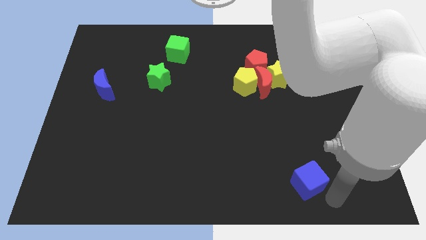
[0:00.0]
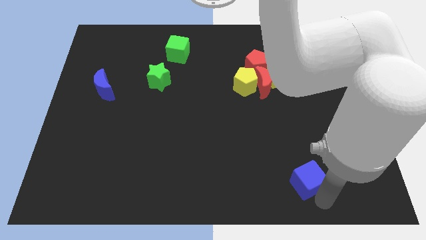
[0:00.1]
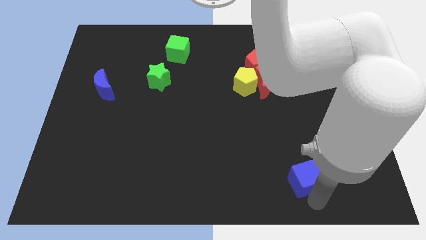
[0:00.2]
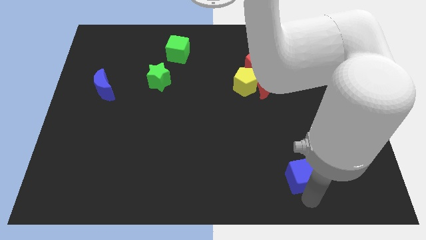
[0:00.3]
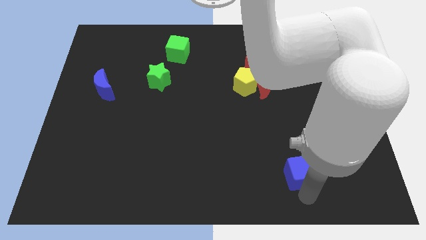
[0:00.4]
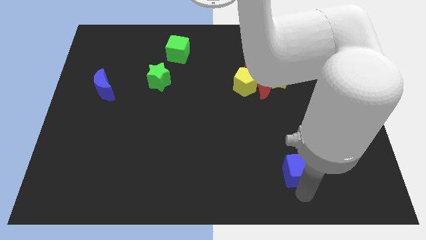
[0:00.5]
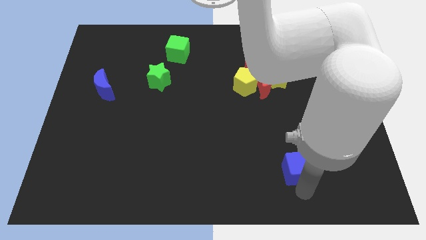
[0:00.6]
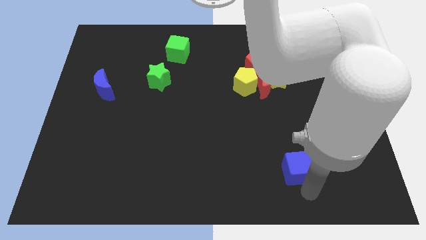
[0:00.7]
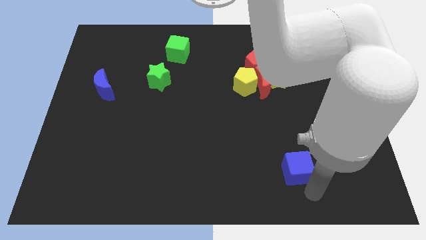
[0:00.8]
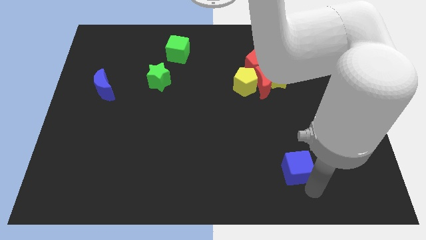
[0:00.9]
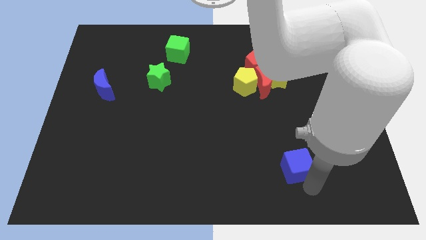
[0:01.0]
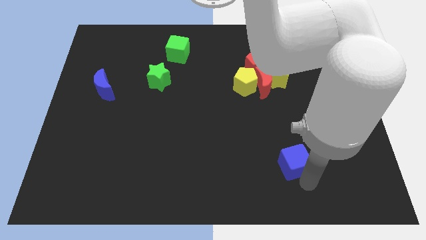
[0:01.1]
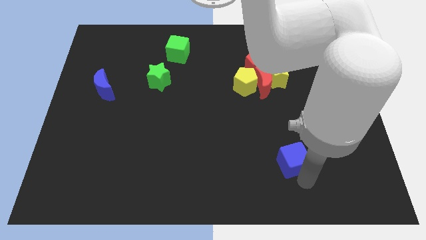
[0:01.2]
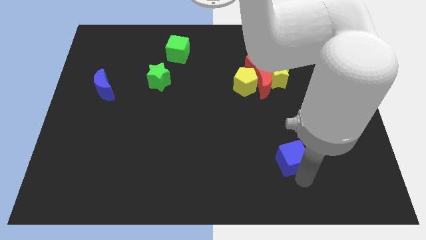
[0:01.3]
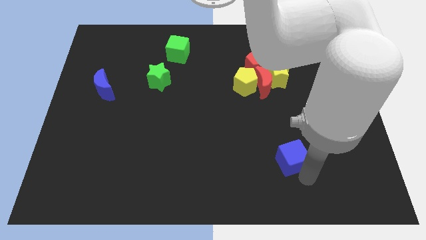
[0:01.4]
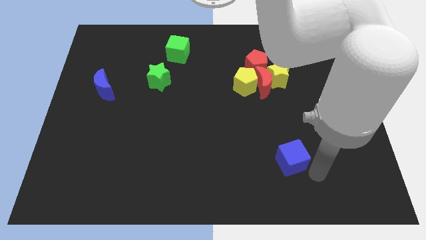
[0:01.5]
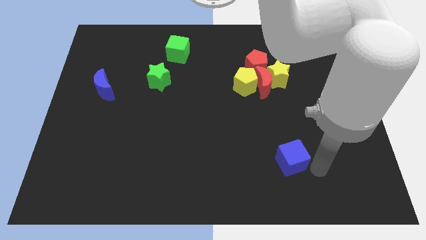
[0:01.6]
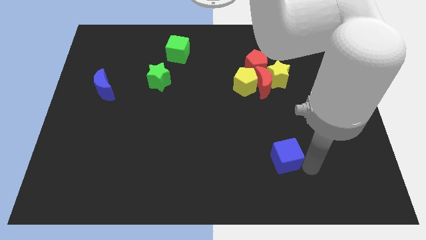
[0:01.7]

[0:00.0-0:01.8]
push the blue cube slightly towards top

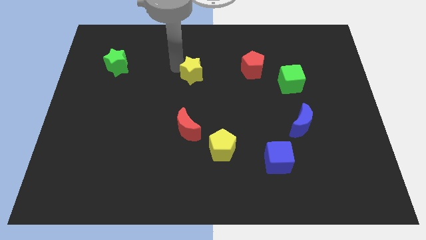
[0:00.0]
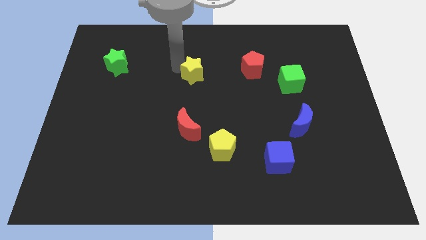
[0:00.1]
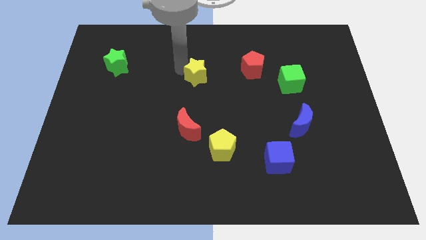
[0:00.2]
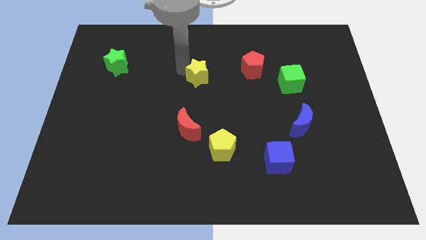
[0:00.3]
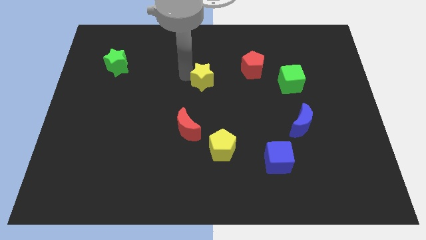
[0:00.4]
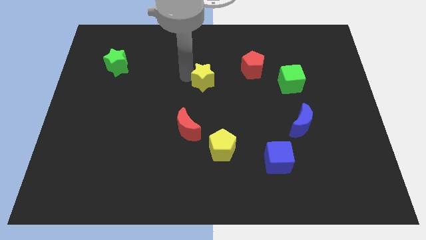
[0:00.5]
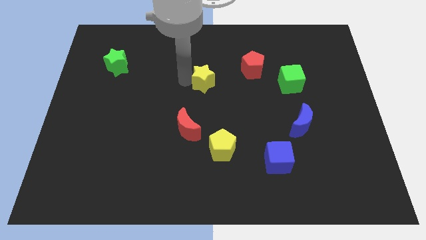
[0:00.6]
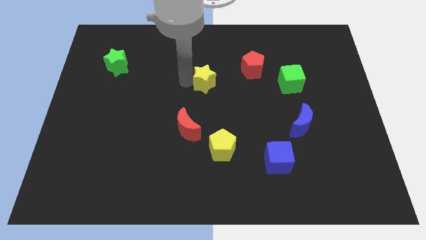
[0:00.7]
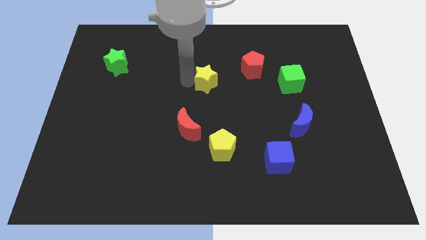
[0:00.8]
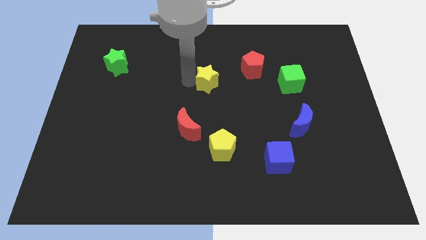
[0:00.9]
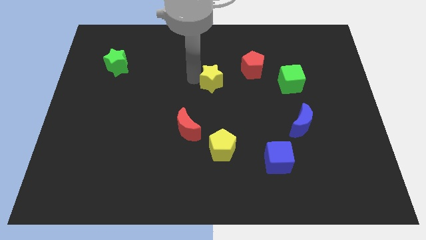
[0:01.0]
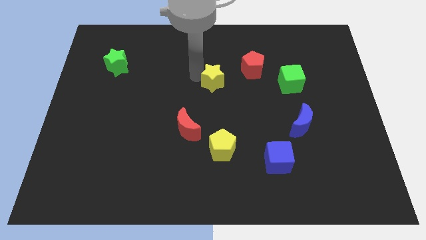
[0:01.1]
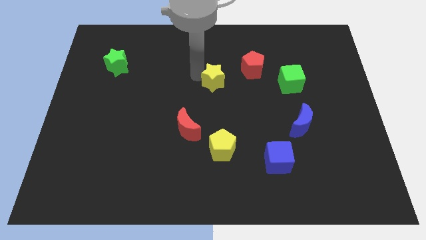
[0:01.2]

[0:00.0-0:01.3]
place yellow star left to red pentagon

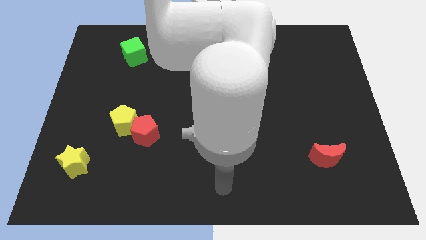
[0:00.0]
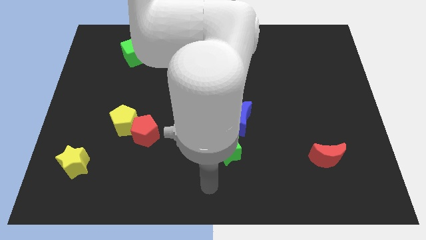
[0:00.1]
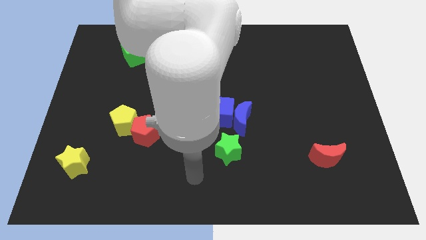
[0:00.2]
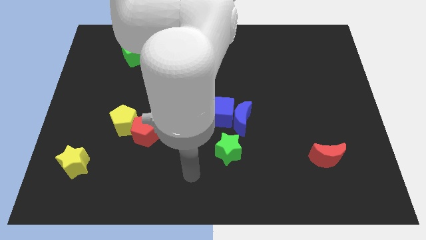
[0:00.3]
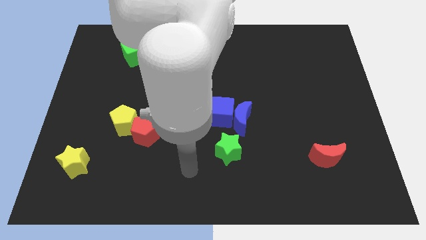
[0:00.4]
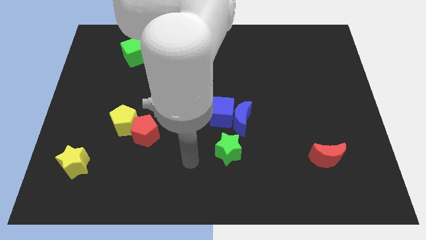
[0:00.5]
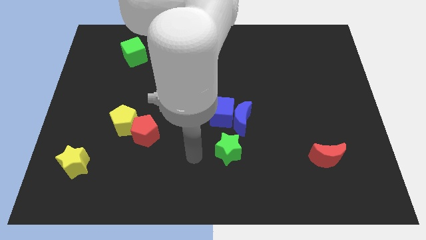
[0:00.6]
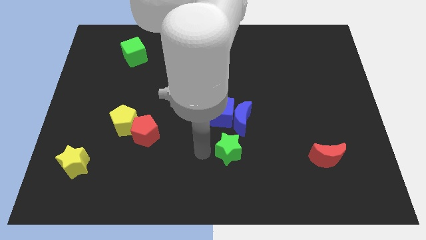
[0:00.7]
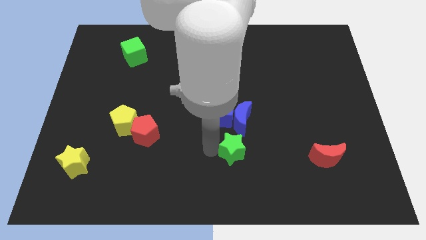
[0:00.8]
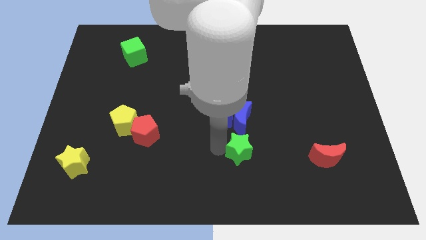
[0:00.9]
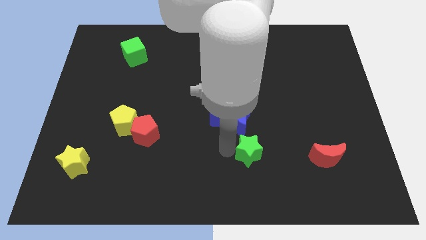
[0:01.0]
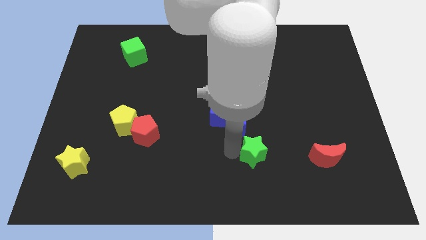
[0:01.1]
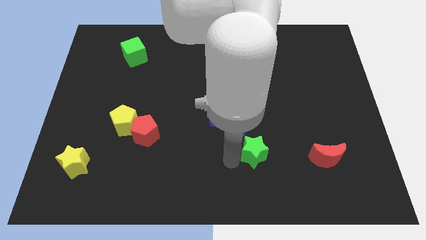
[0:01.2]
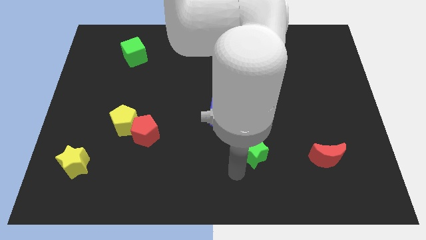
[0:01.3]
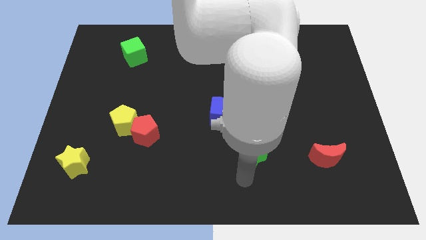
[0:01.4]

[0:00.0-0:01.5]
push the green star slightly to the right

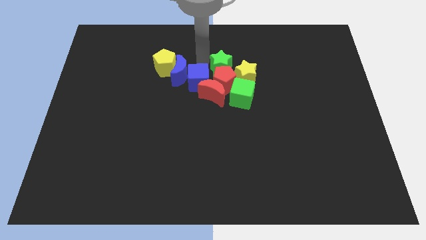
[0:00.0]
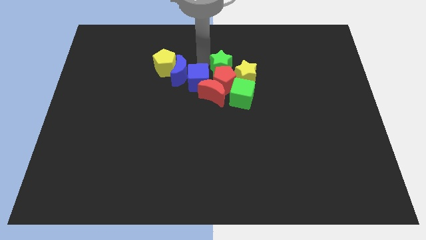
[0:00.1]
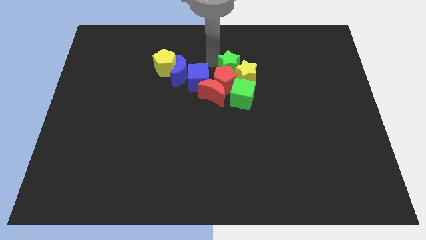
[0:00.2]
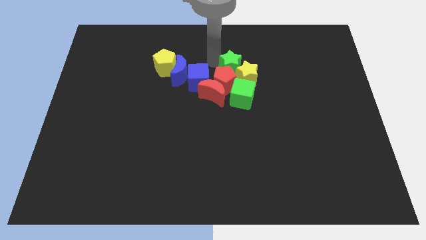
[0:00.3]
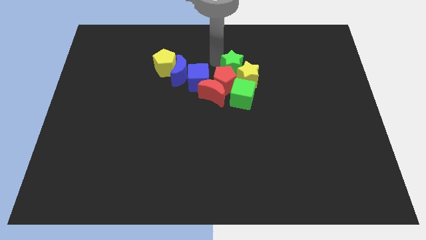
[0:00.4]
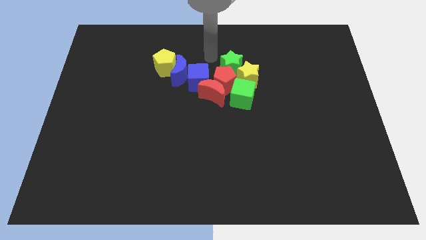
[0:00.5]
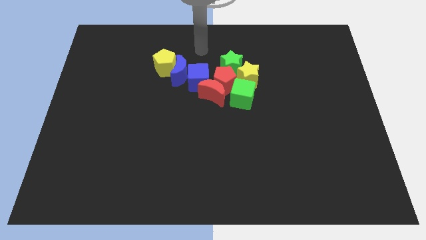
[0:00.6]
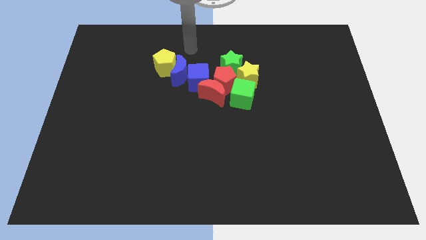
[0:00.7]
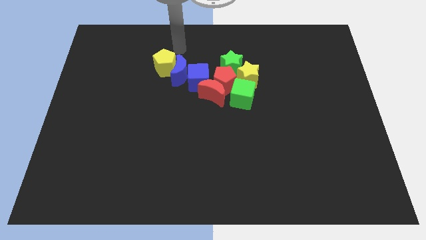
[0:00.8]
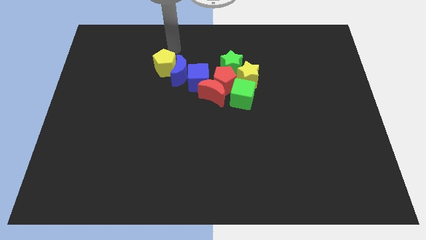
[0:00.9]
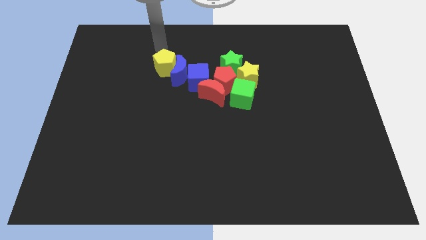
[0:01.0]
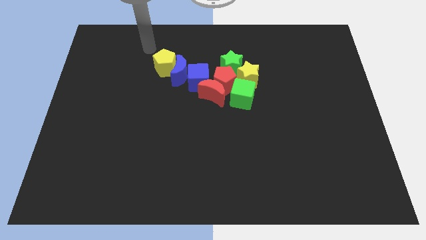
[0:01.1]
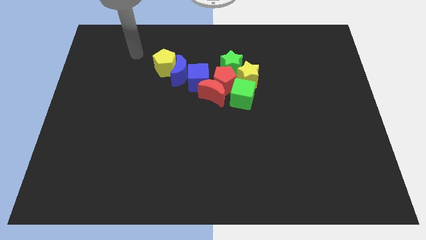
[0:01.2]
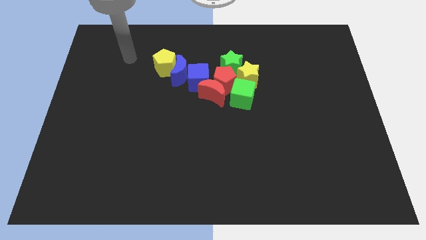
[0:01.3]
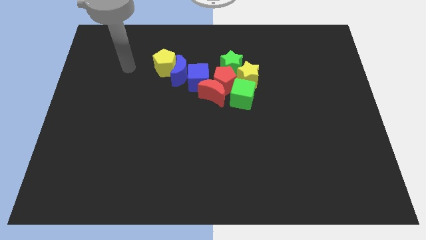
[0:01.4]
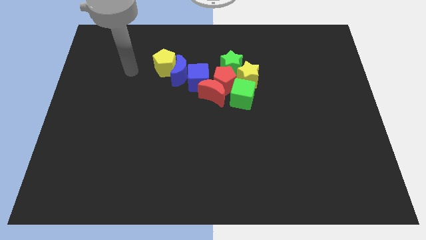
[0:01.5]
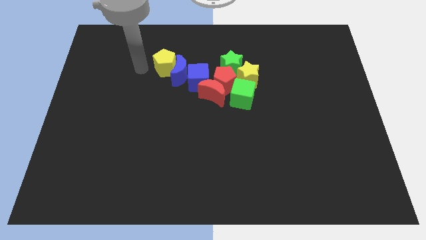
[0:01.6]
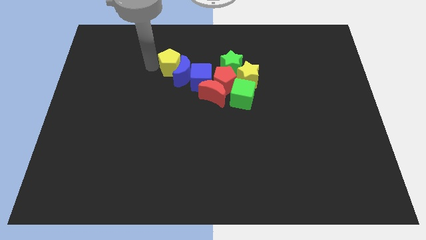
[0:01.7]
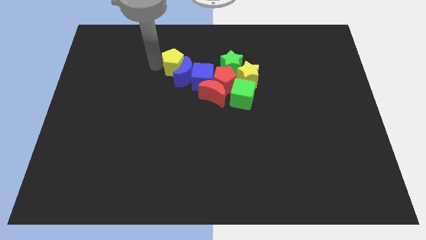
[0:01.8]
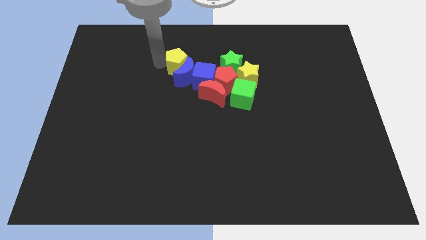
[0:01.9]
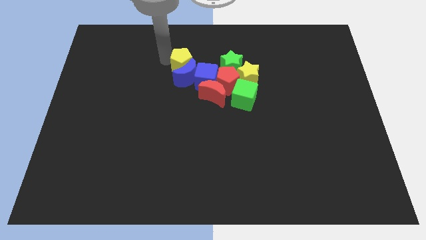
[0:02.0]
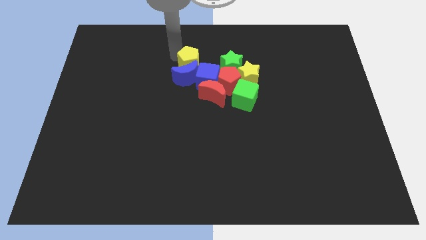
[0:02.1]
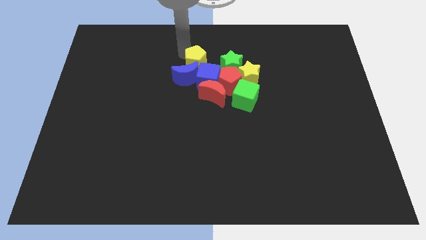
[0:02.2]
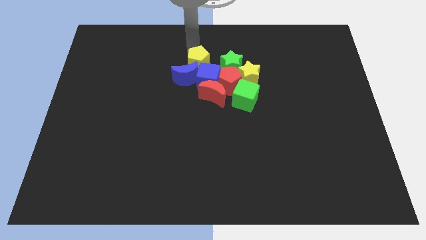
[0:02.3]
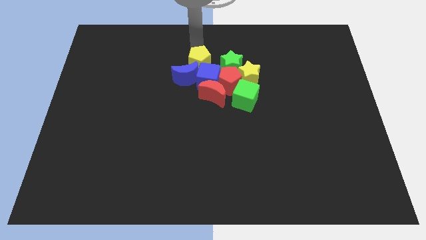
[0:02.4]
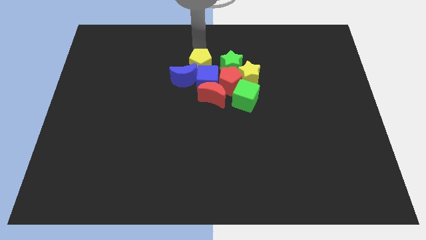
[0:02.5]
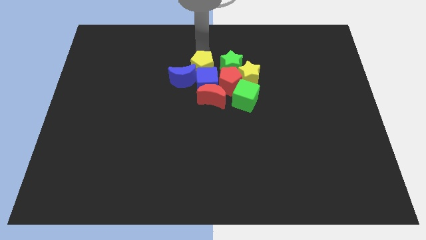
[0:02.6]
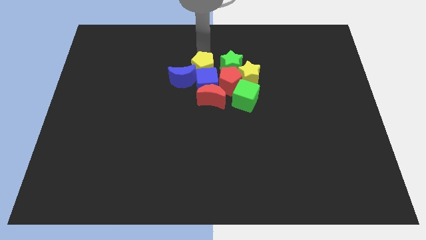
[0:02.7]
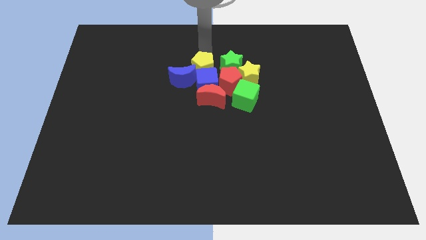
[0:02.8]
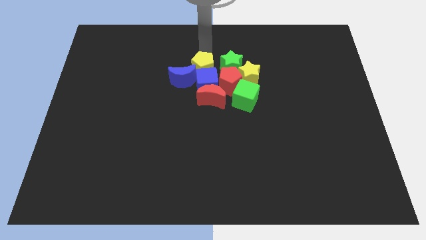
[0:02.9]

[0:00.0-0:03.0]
push the yellow pentagon into the top of the blue cube

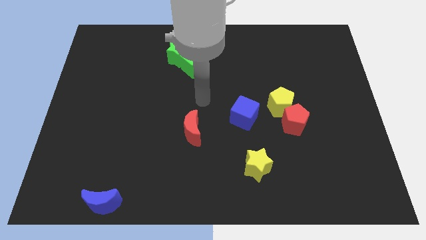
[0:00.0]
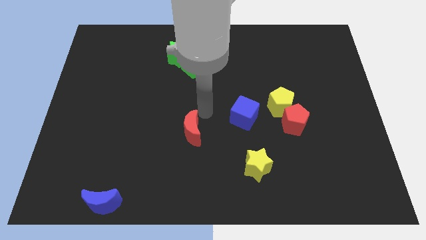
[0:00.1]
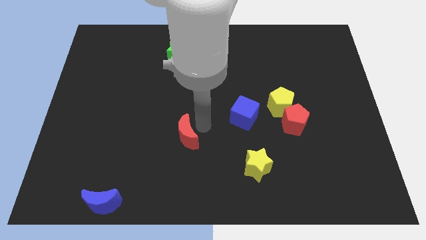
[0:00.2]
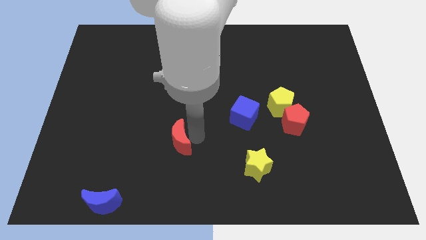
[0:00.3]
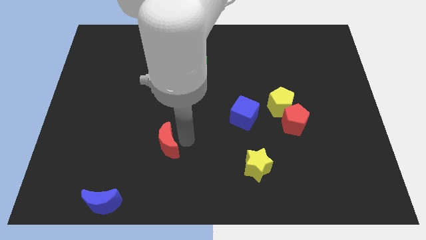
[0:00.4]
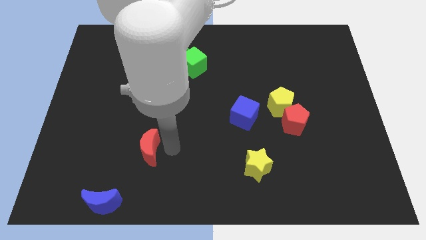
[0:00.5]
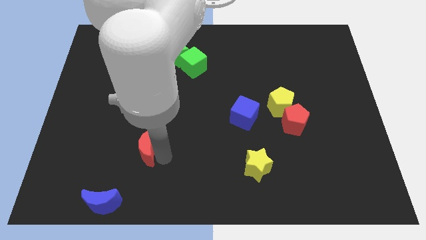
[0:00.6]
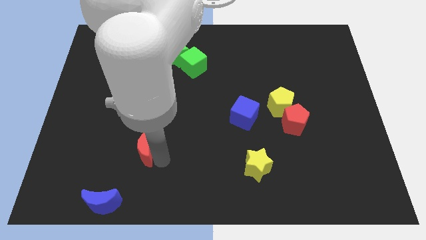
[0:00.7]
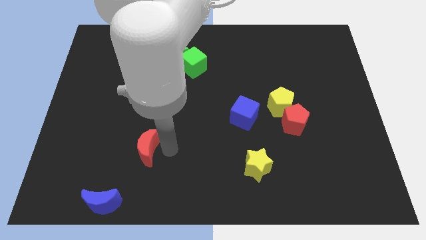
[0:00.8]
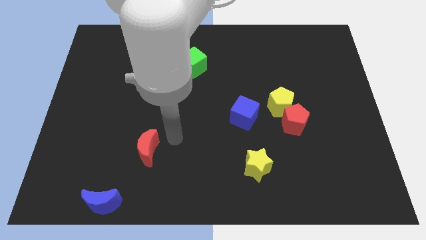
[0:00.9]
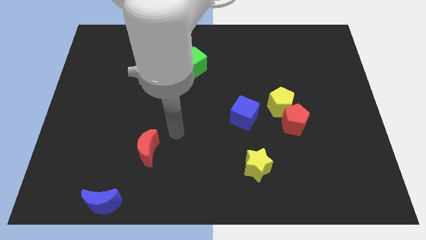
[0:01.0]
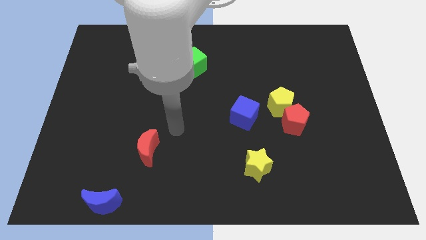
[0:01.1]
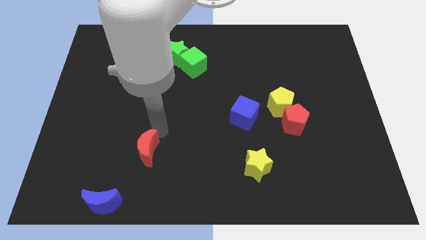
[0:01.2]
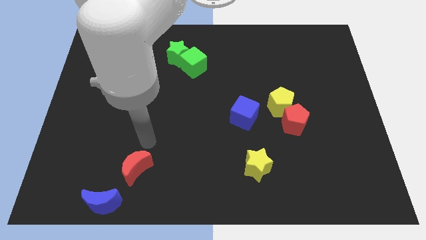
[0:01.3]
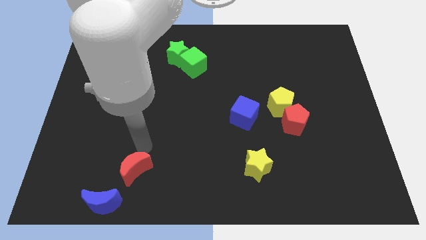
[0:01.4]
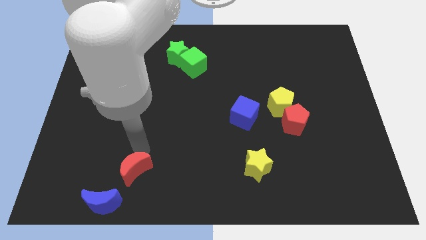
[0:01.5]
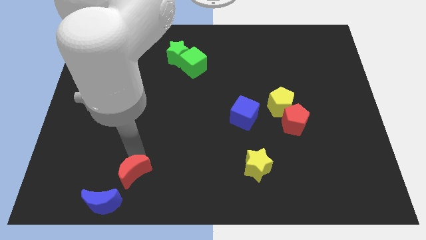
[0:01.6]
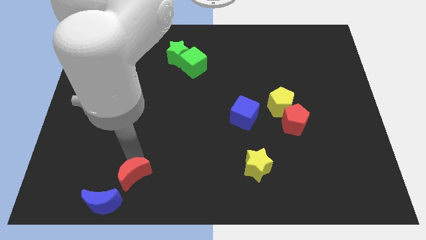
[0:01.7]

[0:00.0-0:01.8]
move red moon close to the blue moon
